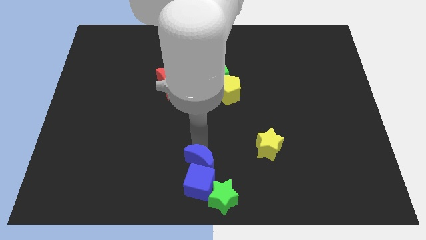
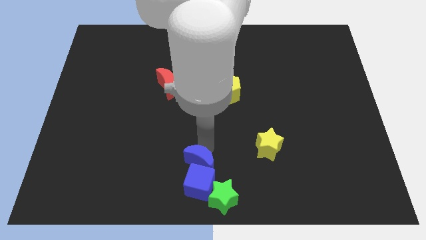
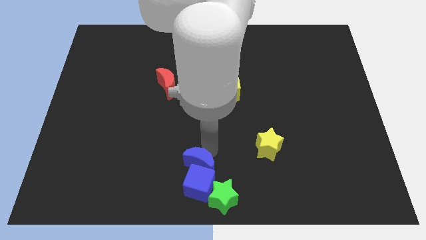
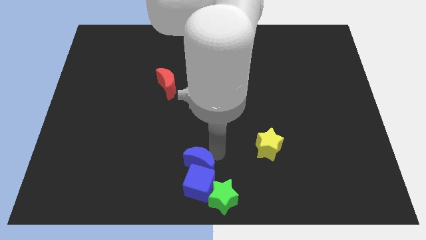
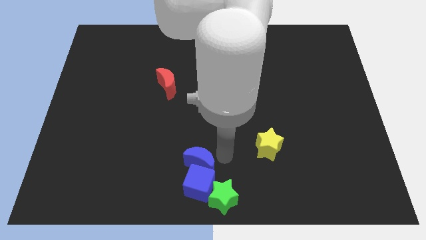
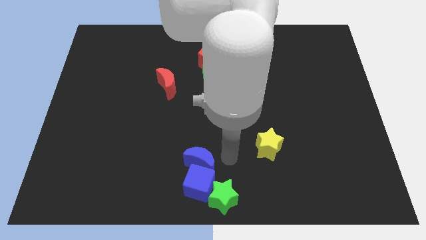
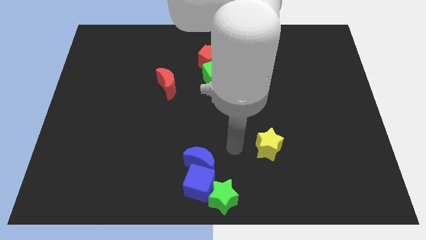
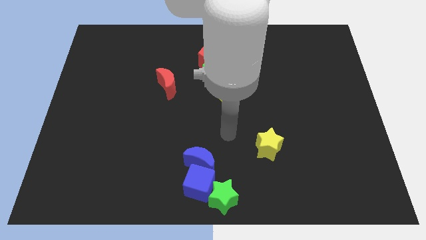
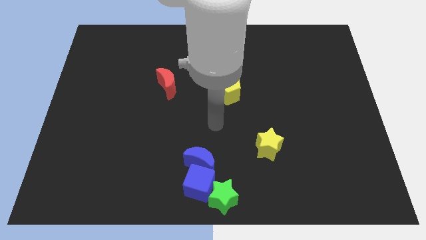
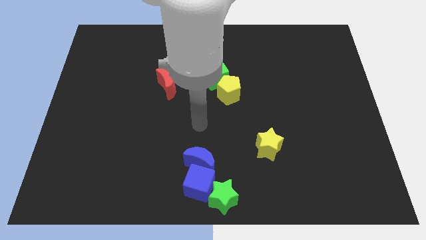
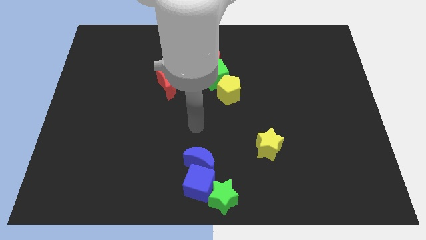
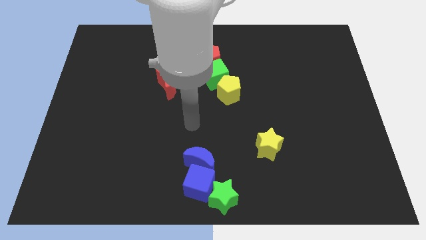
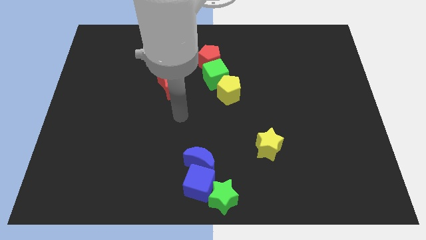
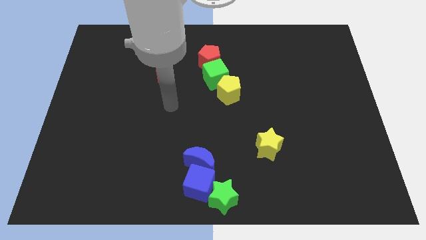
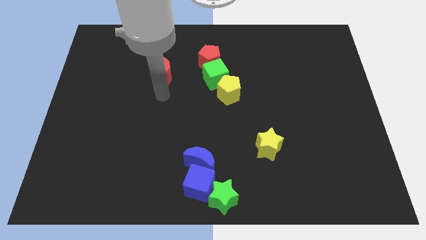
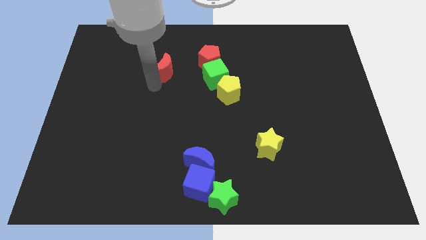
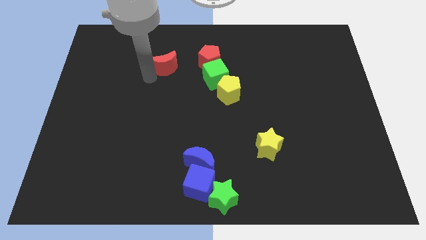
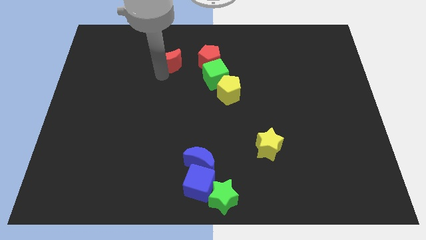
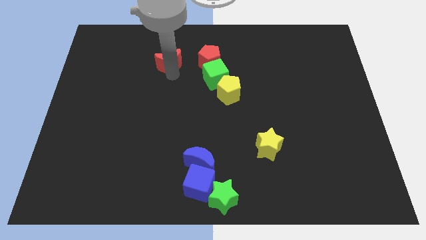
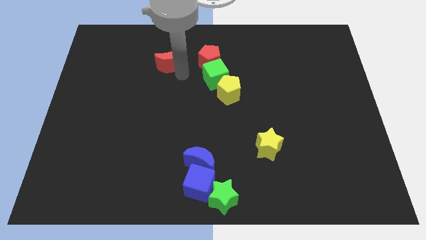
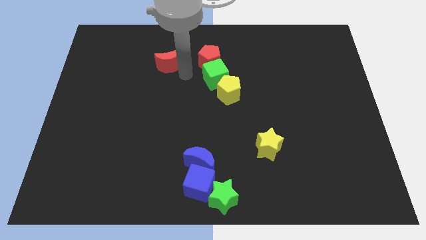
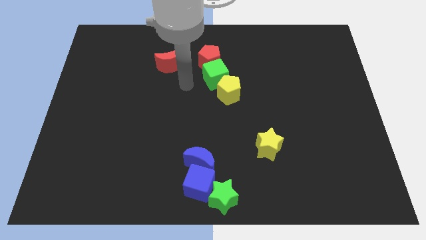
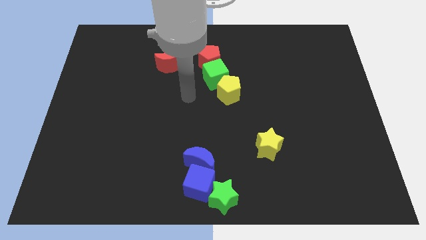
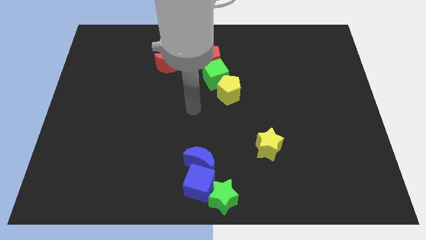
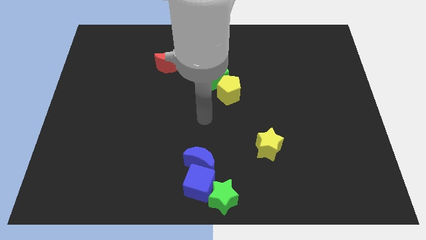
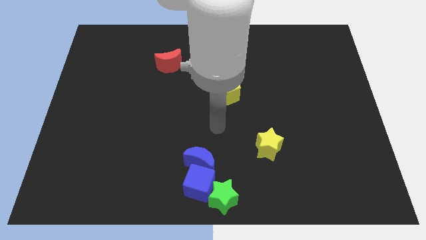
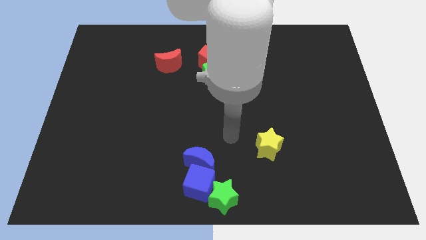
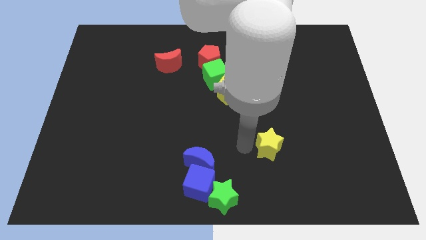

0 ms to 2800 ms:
place the red moon to the left of the red pentagon

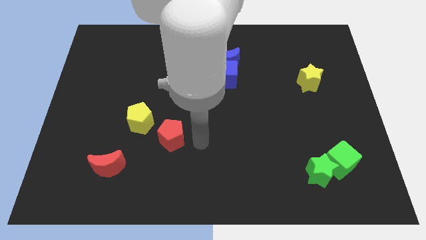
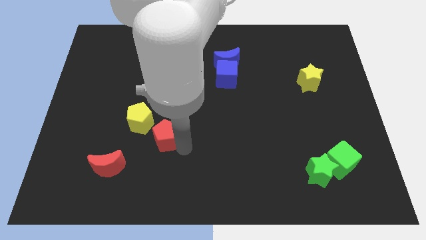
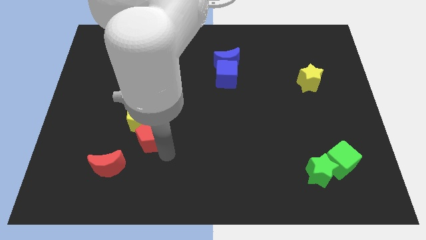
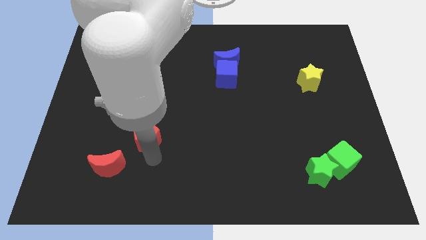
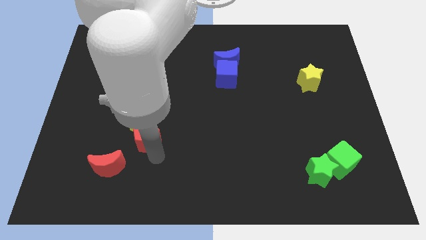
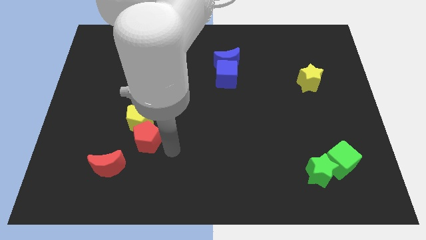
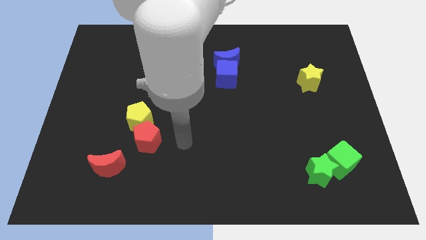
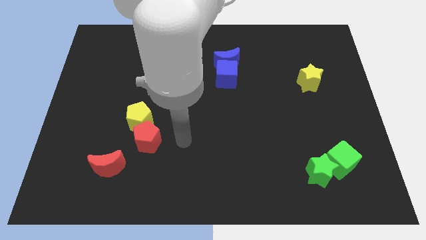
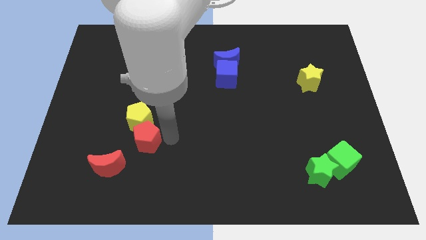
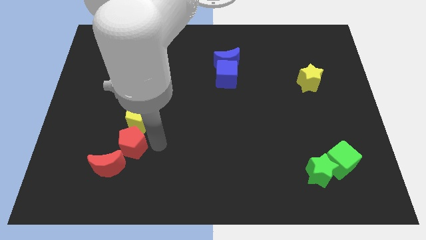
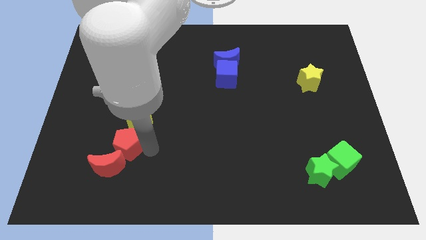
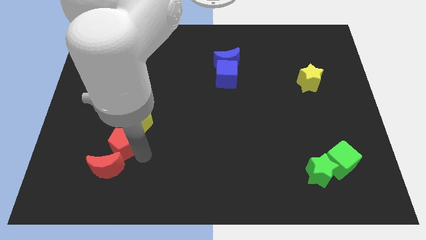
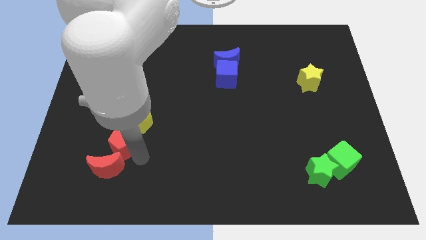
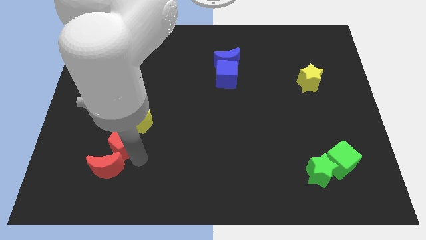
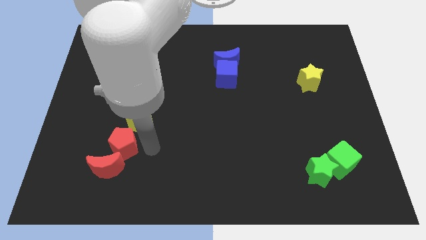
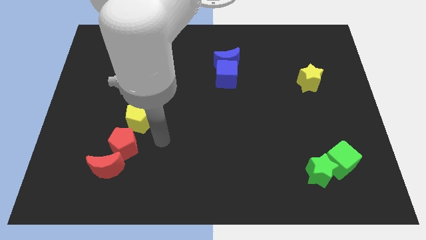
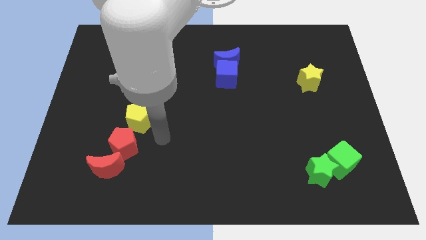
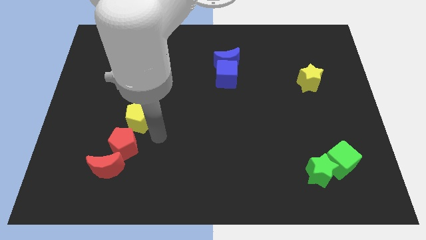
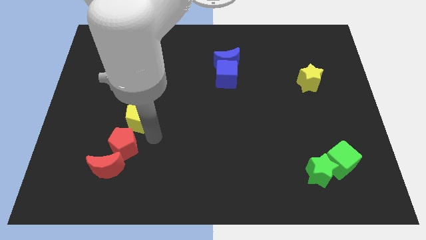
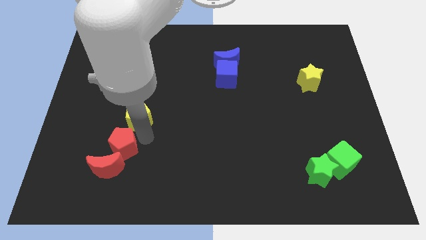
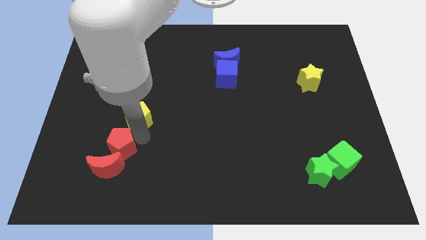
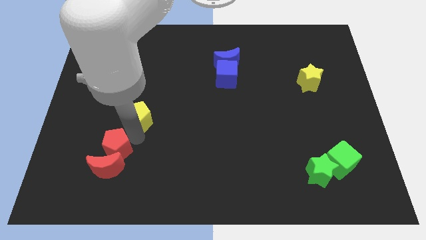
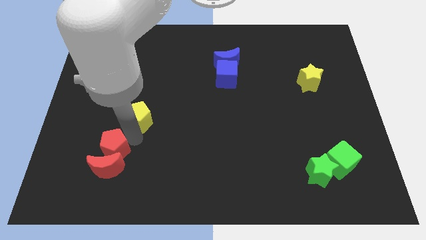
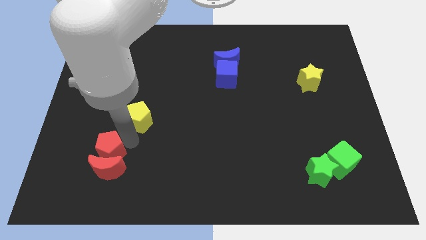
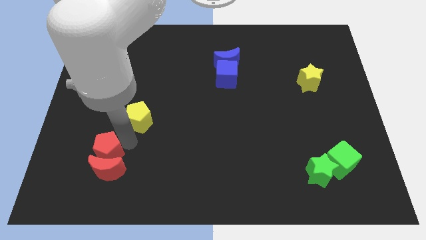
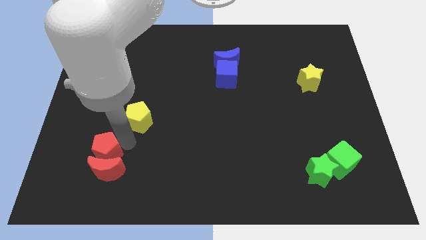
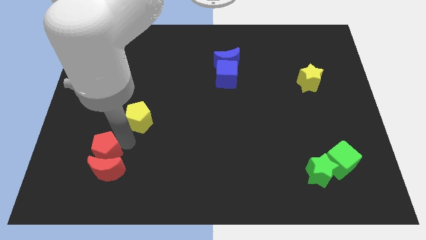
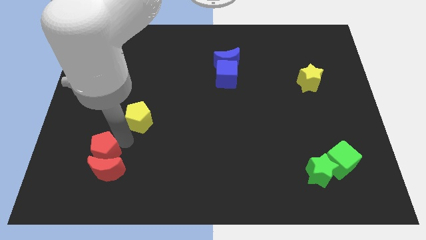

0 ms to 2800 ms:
place your arm in between the red blocks and yellow star

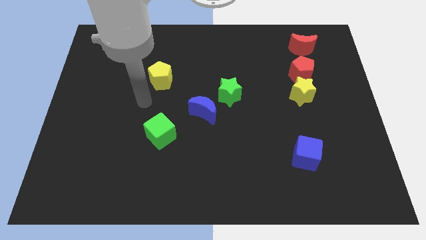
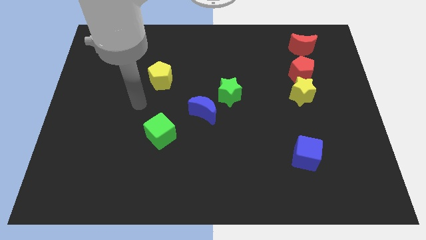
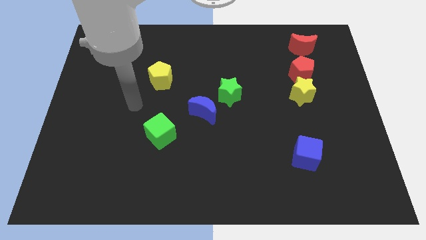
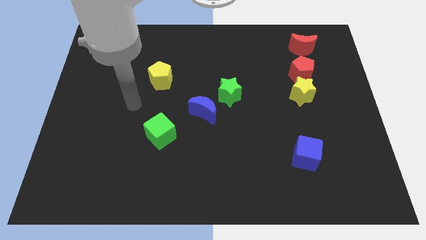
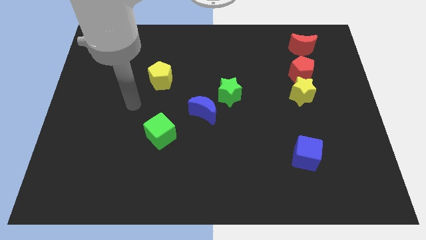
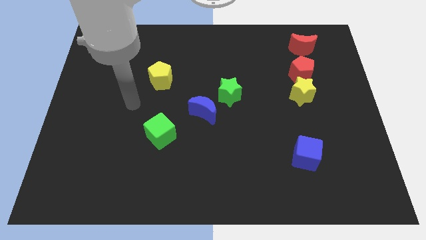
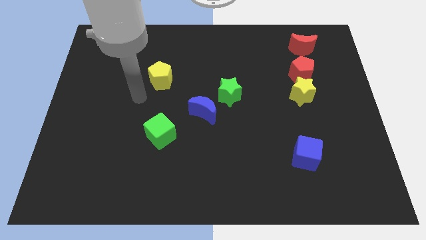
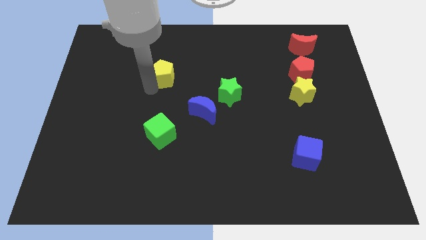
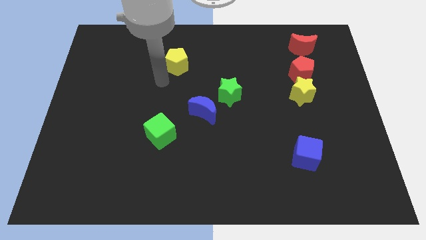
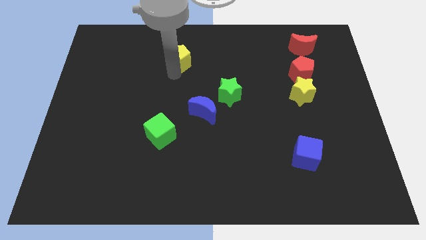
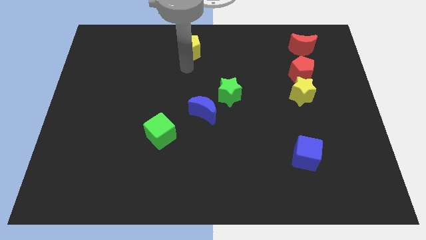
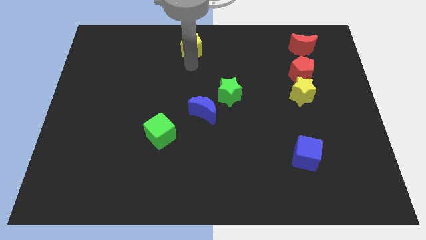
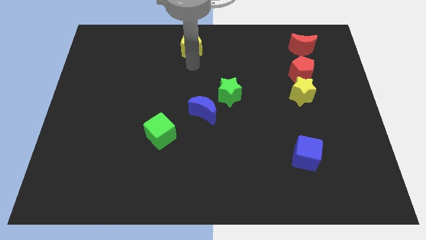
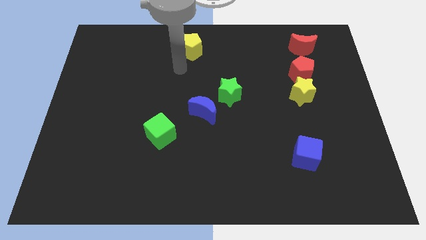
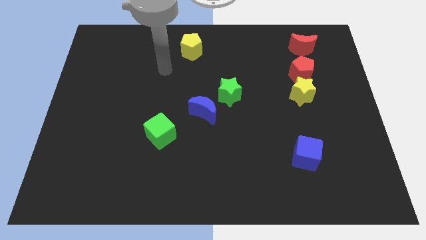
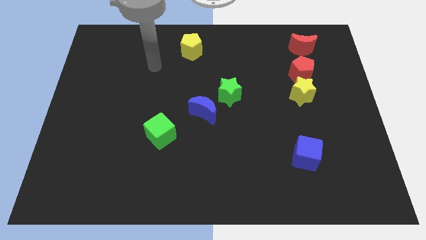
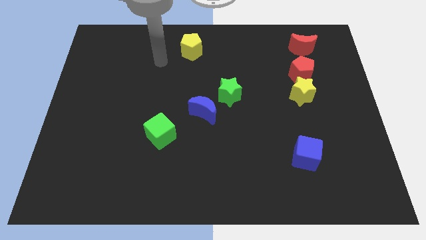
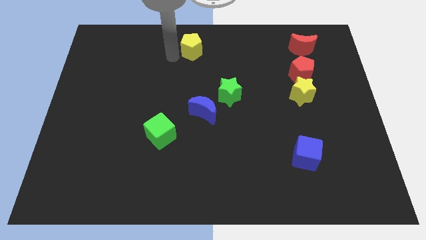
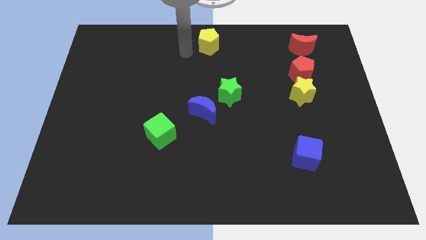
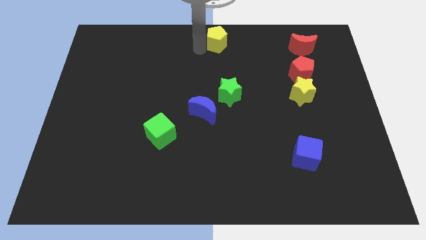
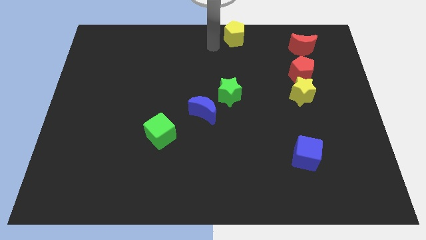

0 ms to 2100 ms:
move the yellow pentagon on the top center of the board

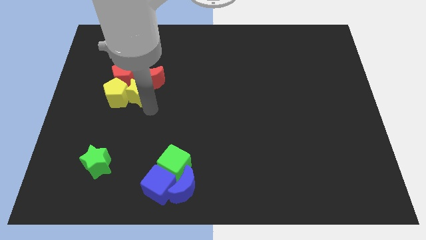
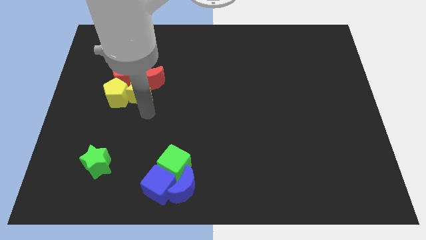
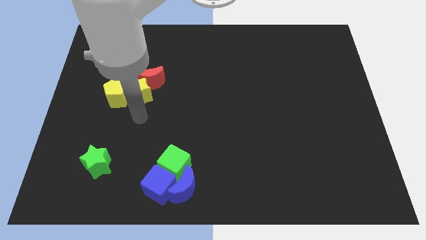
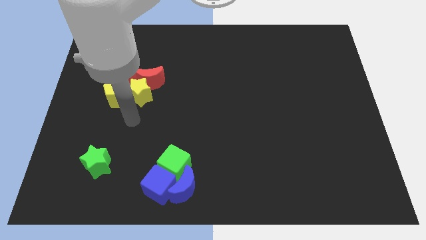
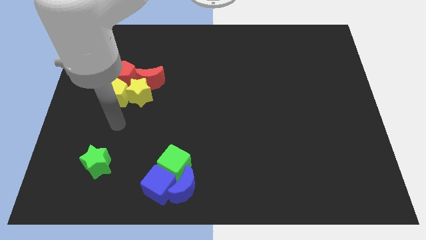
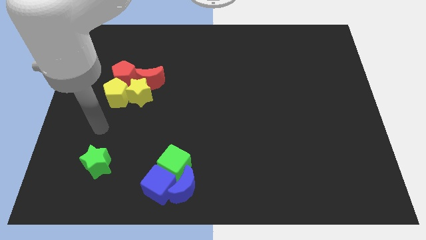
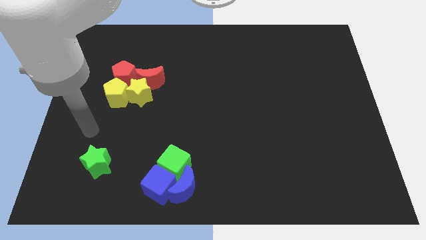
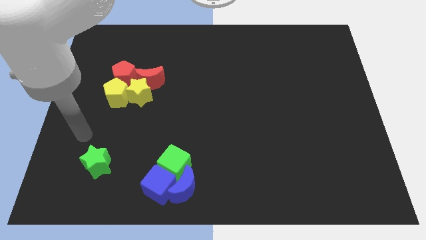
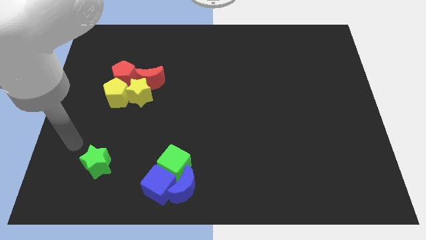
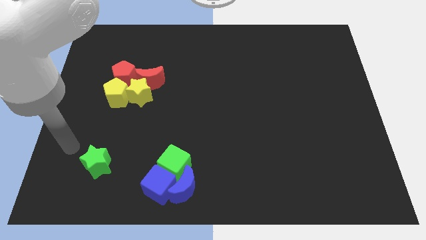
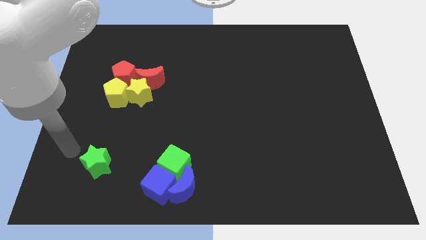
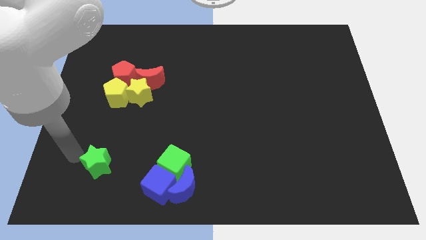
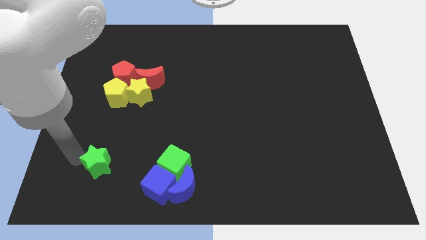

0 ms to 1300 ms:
move your arm left to the green star
